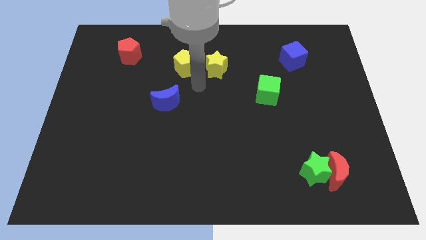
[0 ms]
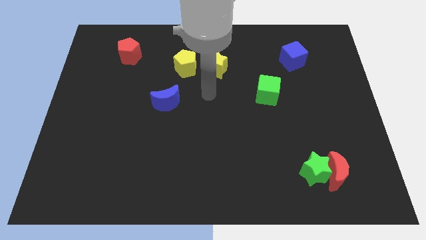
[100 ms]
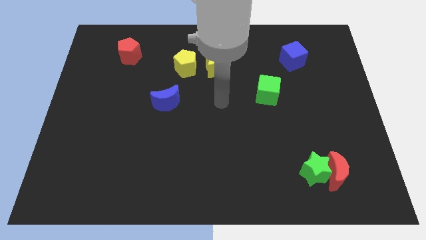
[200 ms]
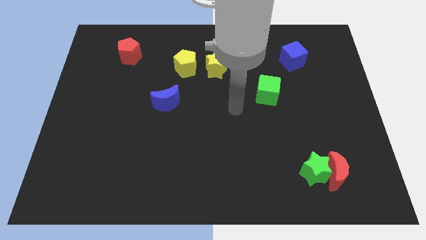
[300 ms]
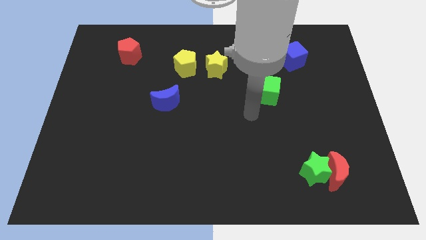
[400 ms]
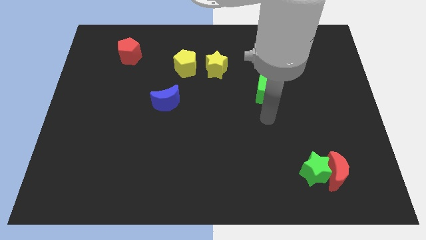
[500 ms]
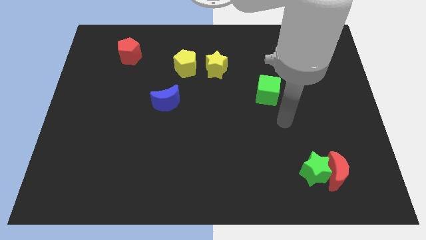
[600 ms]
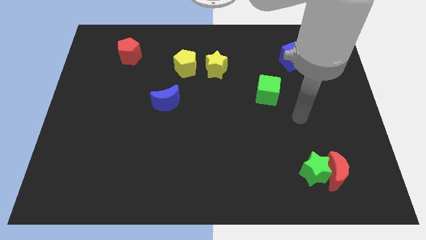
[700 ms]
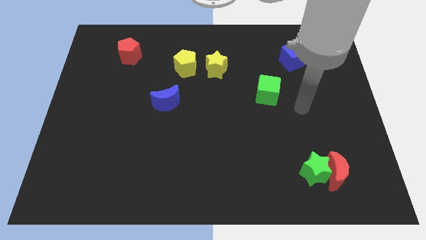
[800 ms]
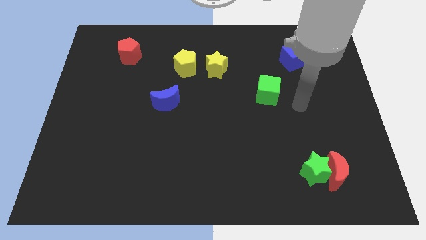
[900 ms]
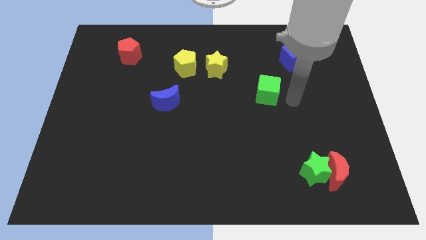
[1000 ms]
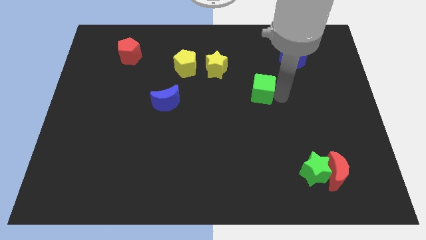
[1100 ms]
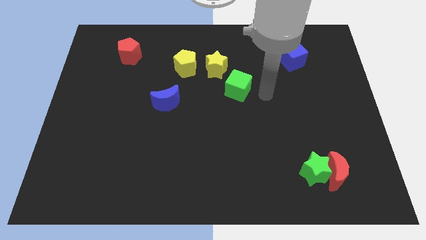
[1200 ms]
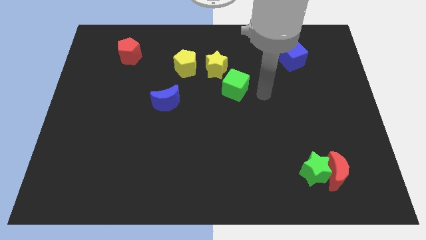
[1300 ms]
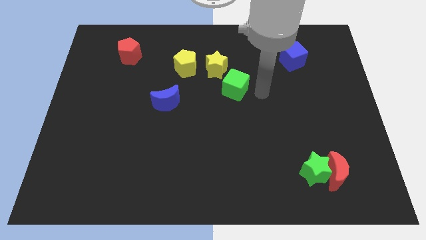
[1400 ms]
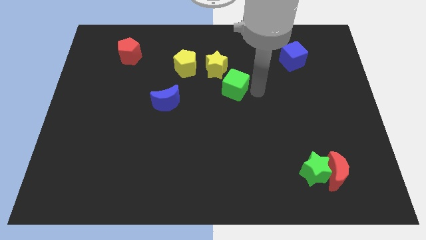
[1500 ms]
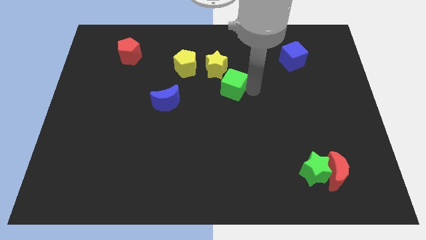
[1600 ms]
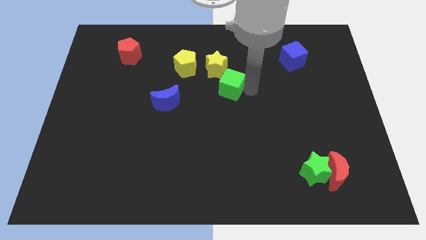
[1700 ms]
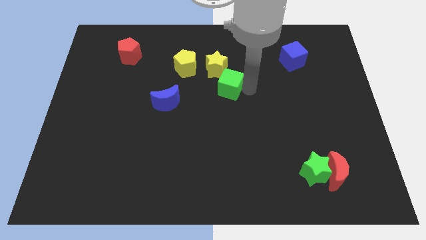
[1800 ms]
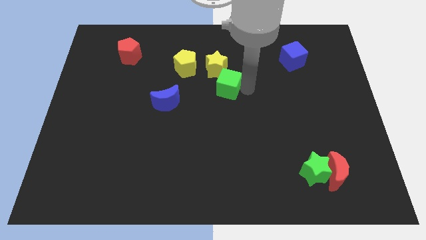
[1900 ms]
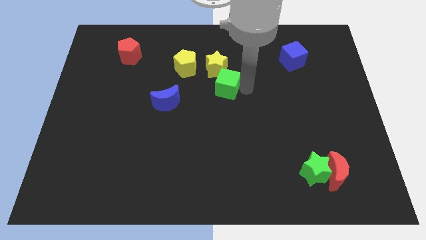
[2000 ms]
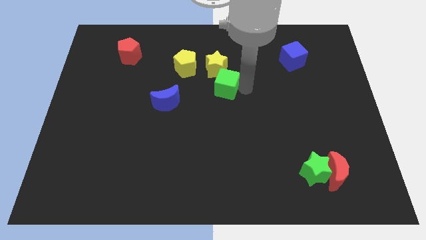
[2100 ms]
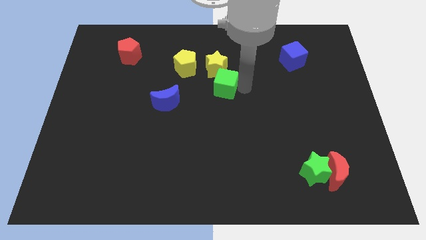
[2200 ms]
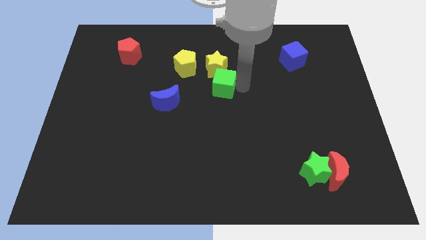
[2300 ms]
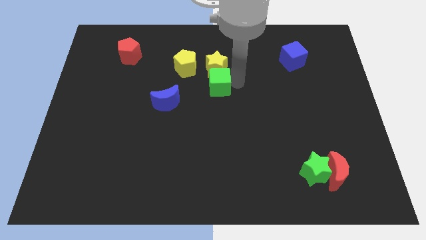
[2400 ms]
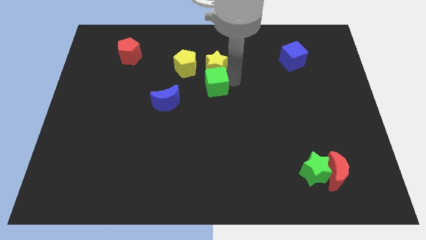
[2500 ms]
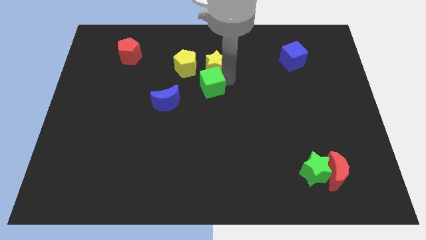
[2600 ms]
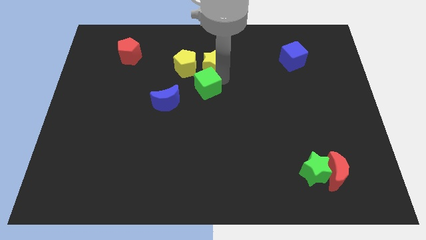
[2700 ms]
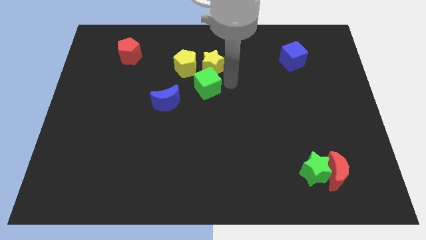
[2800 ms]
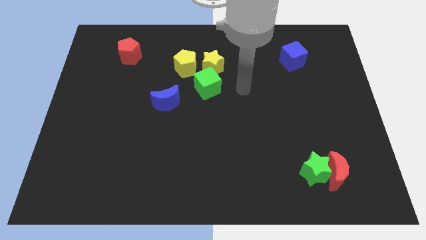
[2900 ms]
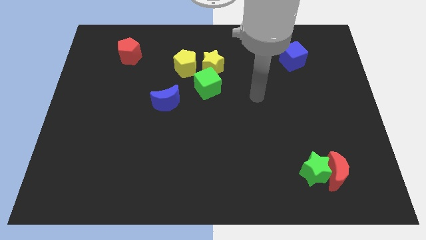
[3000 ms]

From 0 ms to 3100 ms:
move the green cube below the yellow star

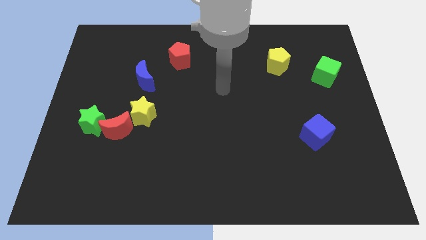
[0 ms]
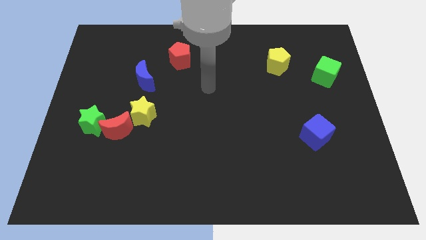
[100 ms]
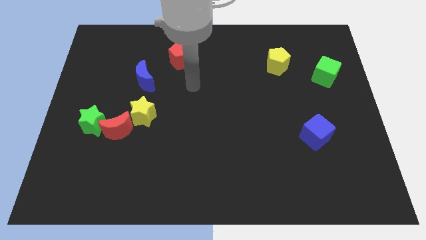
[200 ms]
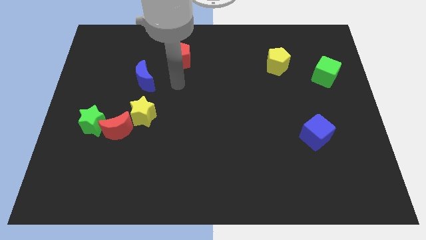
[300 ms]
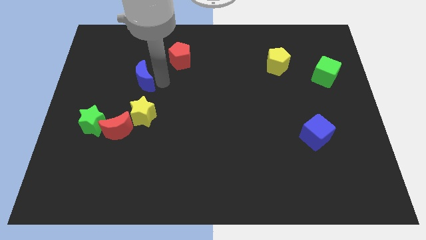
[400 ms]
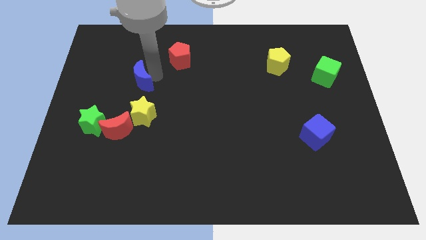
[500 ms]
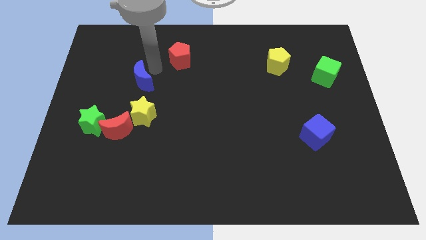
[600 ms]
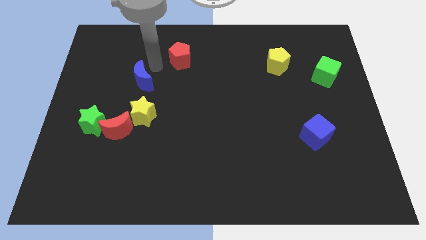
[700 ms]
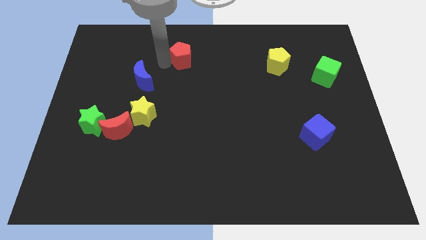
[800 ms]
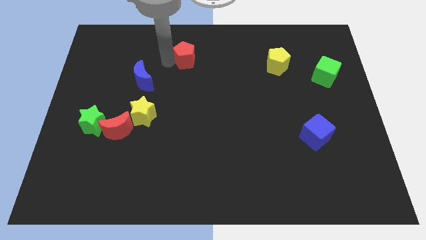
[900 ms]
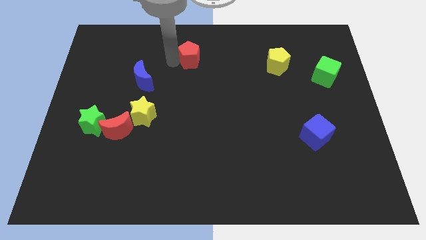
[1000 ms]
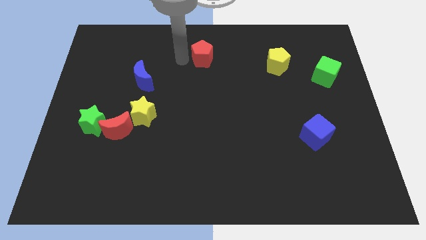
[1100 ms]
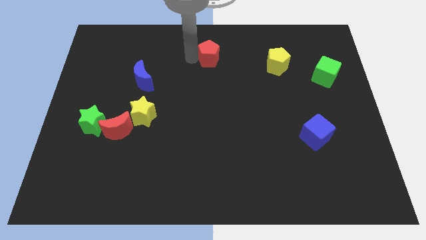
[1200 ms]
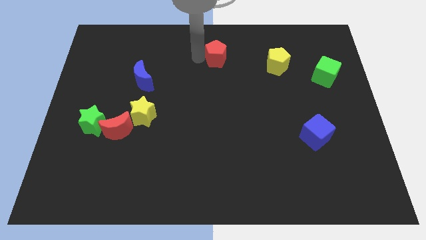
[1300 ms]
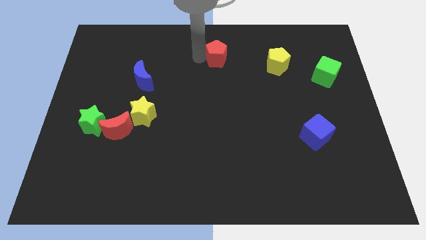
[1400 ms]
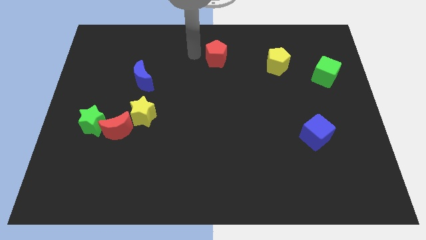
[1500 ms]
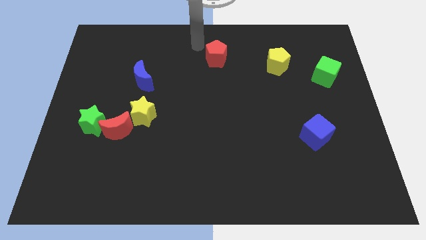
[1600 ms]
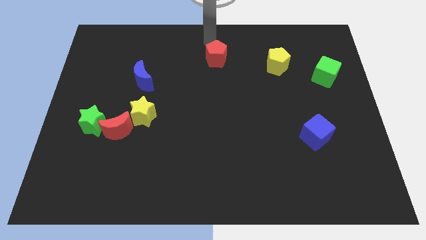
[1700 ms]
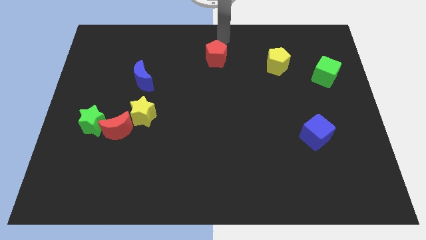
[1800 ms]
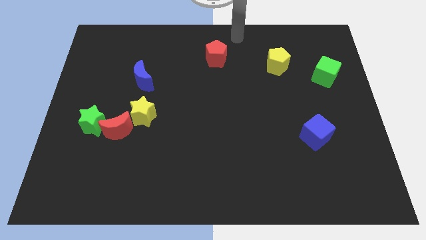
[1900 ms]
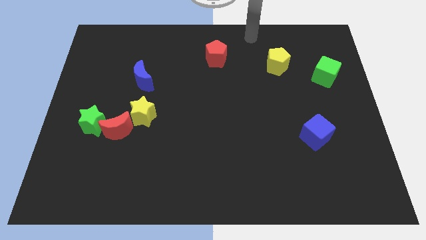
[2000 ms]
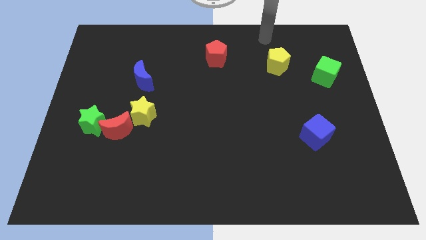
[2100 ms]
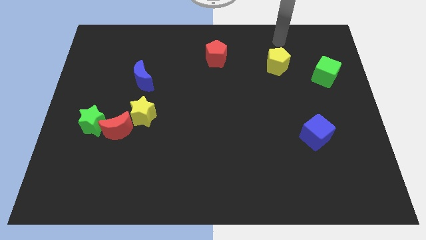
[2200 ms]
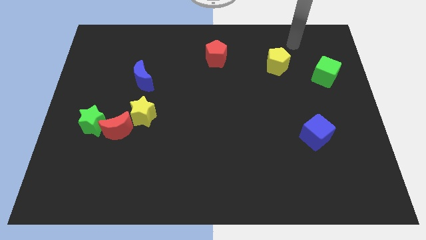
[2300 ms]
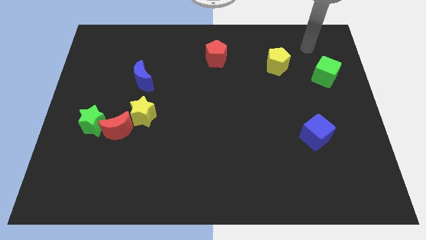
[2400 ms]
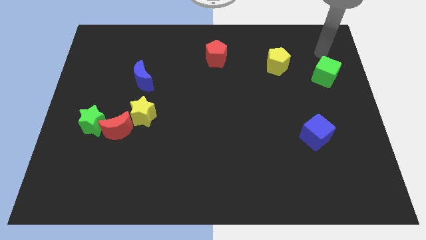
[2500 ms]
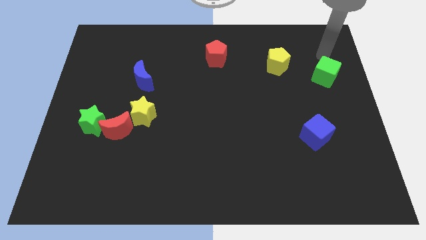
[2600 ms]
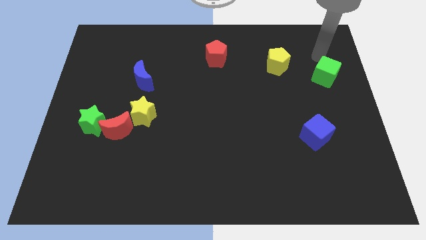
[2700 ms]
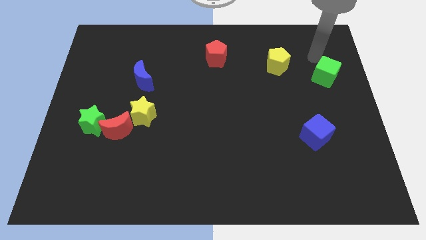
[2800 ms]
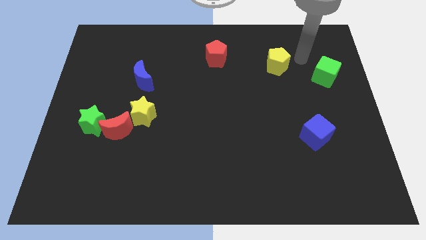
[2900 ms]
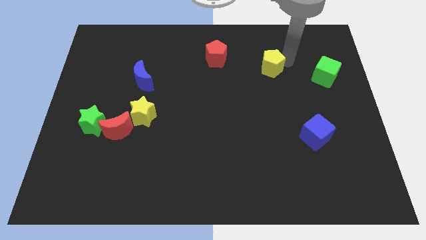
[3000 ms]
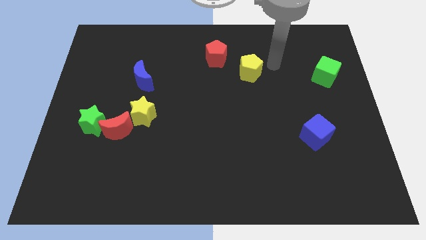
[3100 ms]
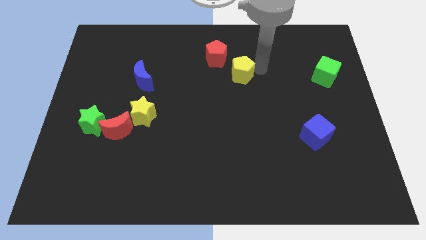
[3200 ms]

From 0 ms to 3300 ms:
move the yellow pentagon diagonally on the bottom right side of the red pentagon

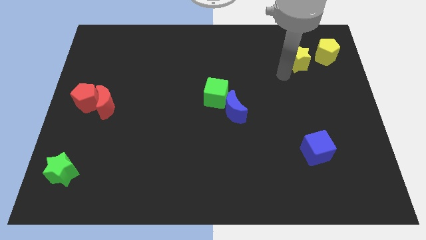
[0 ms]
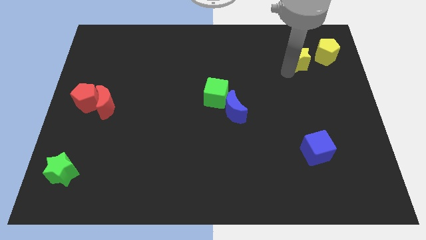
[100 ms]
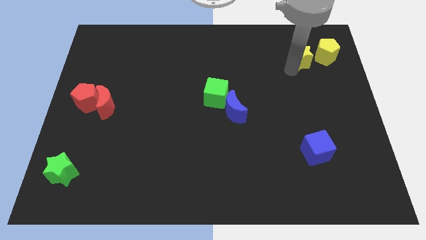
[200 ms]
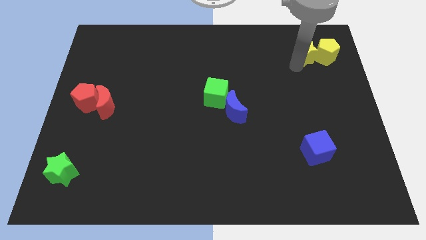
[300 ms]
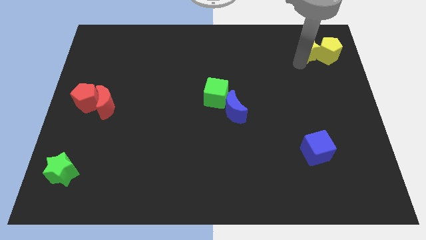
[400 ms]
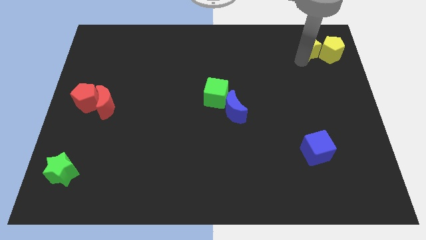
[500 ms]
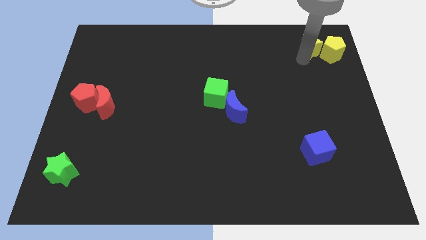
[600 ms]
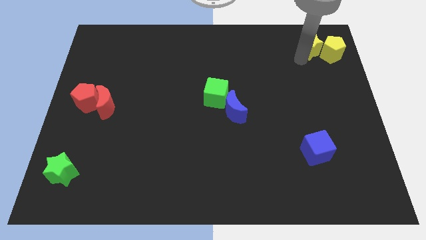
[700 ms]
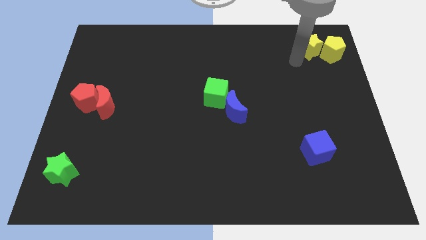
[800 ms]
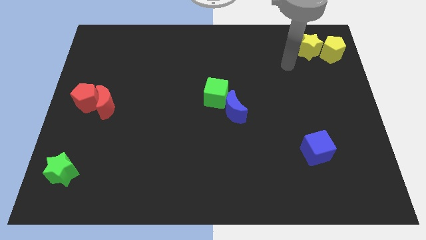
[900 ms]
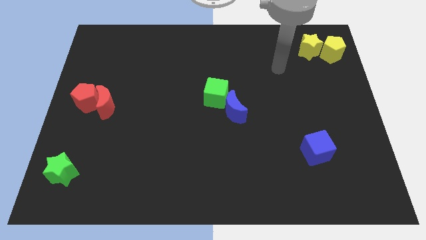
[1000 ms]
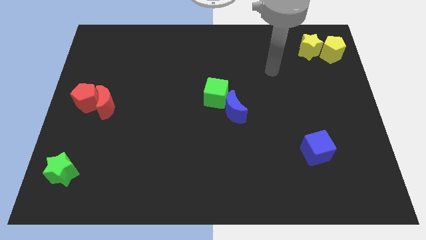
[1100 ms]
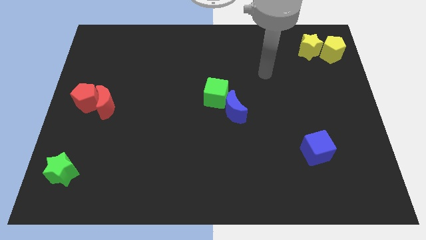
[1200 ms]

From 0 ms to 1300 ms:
move the yellow star to the left of the yellow pentagon

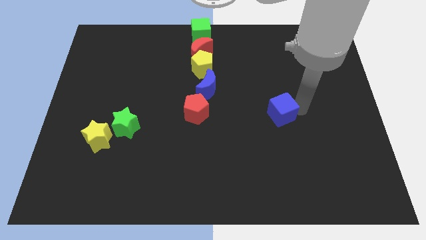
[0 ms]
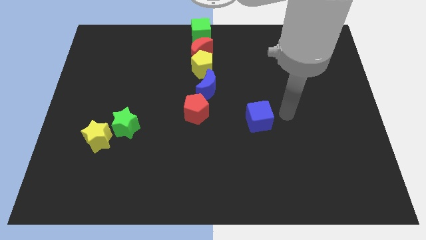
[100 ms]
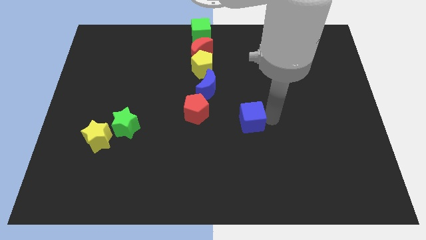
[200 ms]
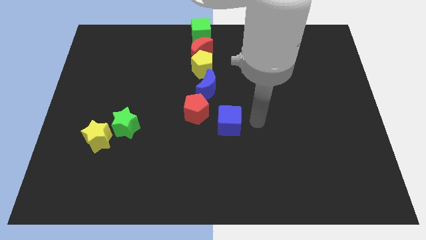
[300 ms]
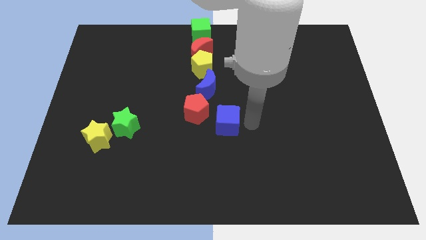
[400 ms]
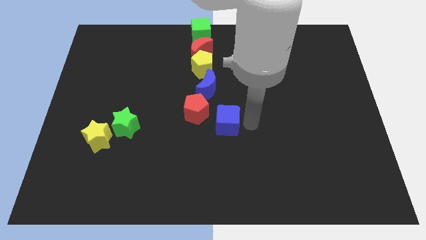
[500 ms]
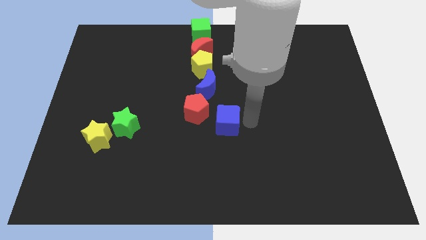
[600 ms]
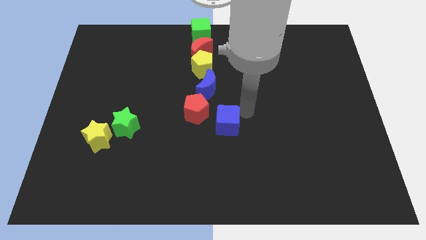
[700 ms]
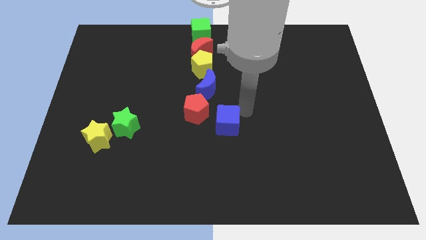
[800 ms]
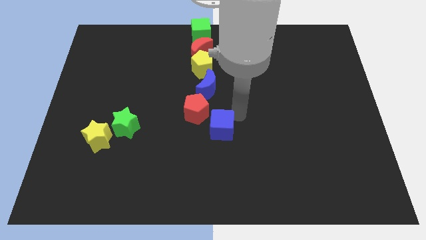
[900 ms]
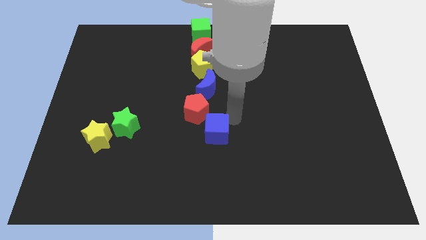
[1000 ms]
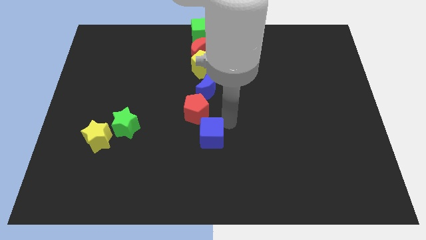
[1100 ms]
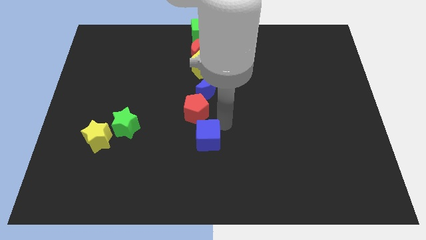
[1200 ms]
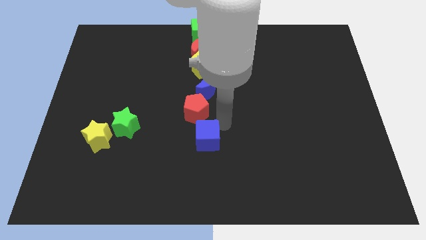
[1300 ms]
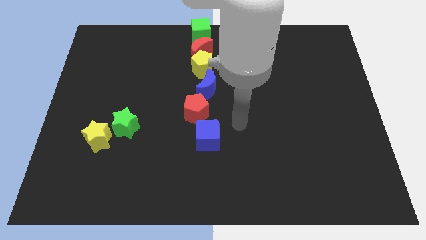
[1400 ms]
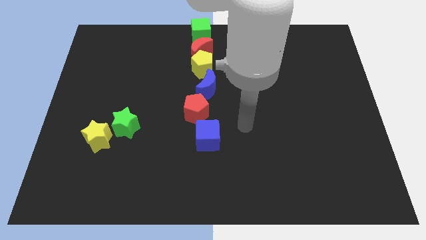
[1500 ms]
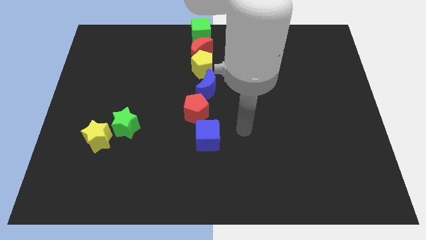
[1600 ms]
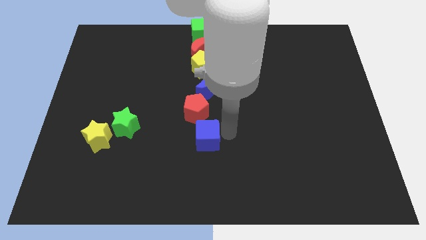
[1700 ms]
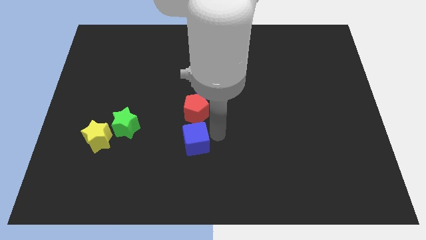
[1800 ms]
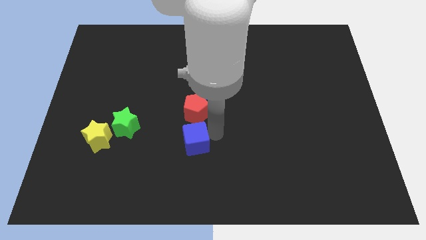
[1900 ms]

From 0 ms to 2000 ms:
push the blue cube to the bottom of the red pentagon
